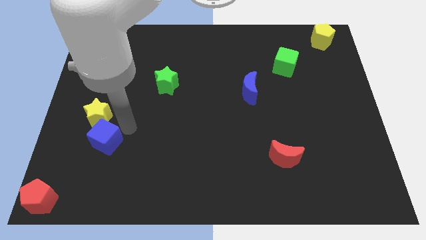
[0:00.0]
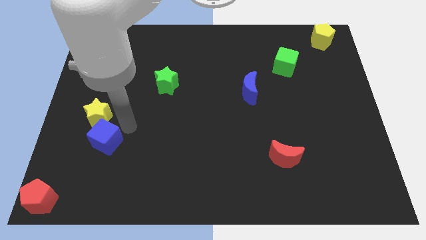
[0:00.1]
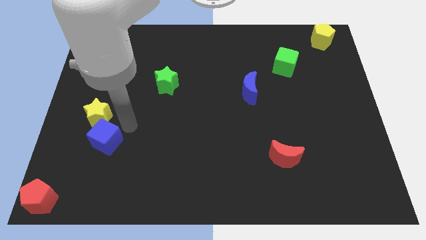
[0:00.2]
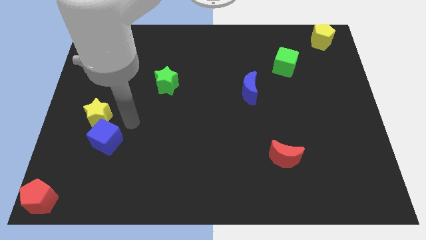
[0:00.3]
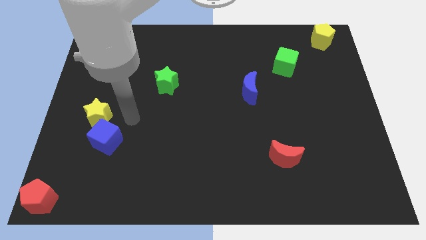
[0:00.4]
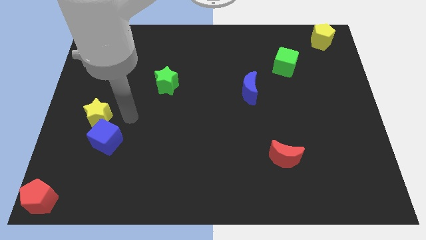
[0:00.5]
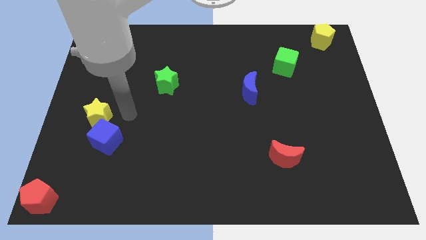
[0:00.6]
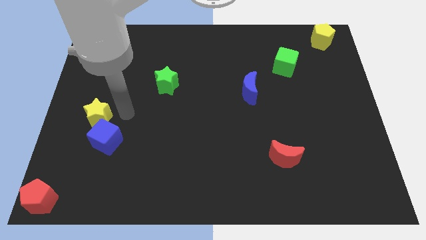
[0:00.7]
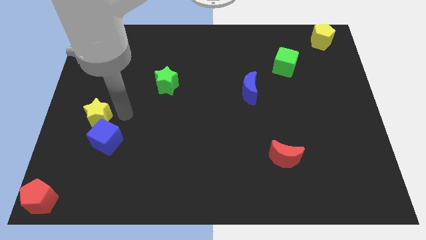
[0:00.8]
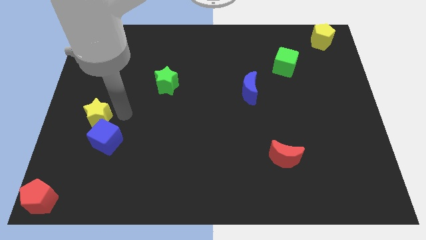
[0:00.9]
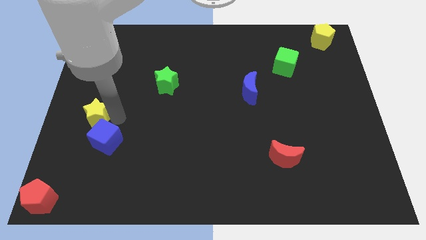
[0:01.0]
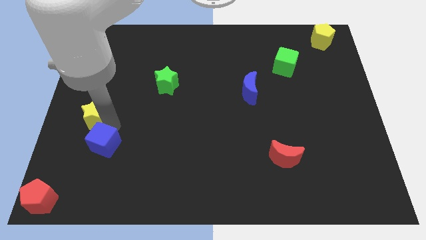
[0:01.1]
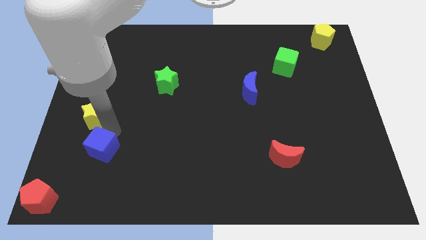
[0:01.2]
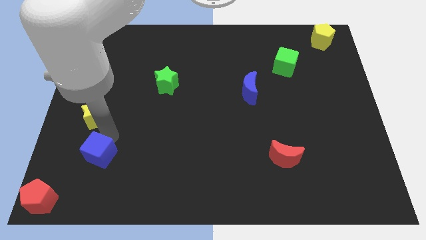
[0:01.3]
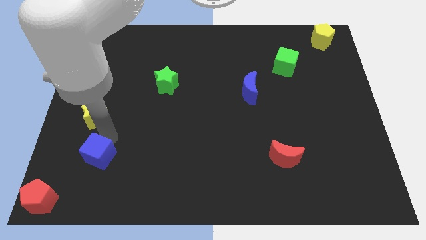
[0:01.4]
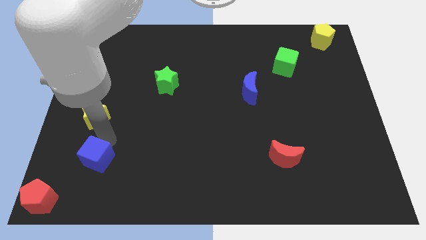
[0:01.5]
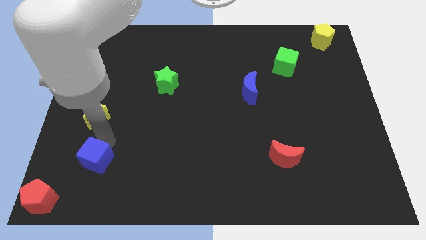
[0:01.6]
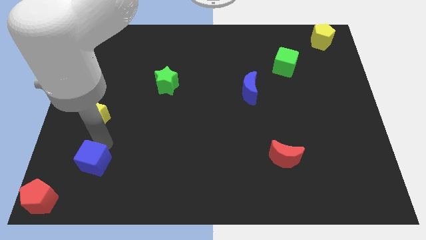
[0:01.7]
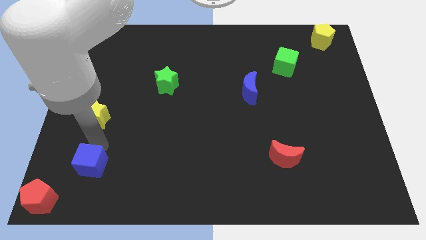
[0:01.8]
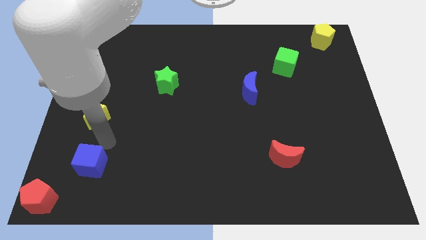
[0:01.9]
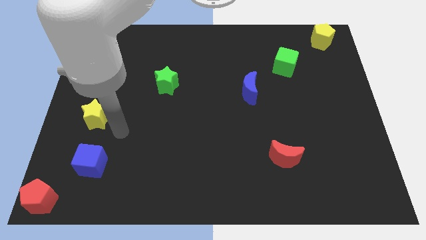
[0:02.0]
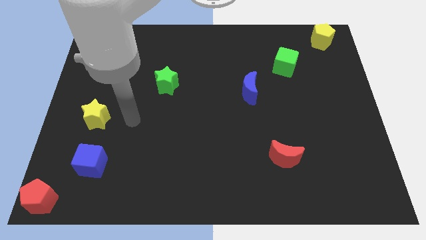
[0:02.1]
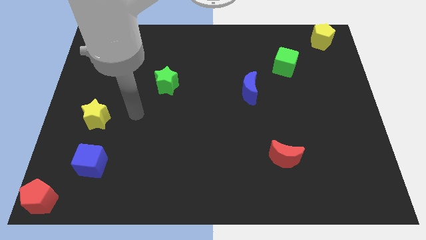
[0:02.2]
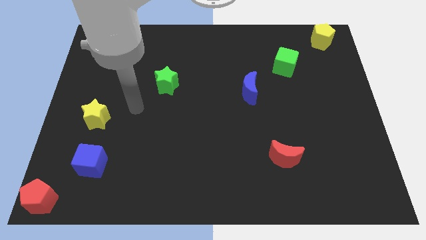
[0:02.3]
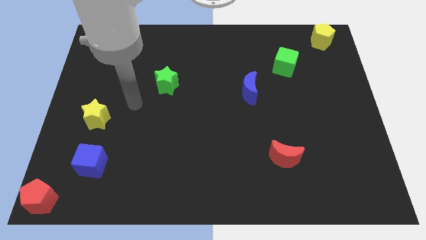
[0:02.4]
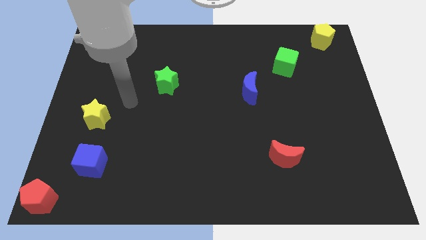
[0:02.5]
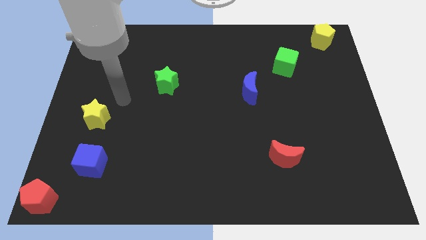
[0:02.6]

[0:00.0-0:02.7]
place blue block between yellow star and red pentagon

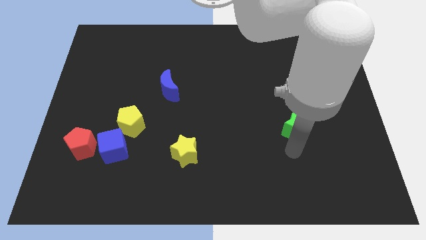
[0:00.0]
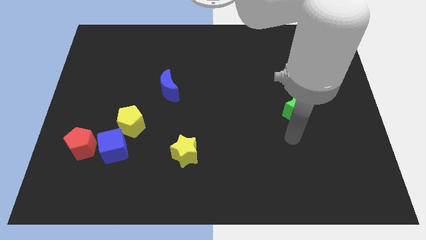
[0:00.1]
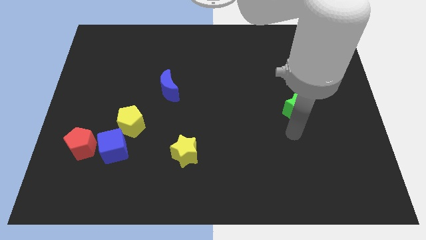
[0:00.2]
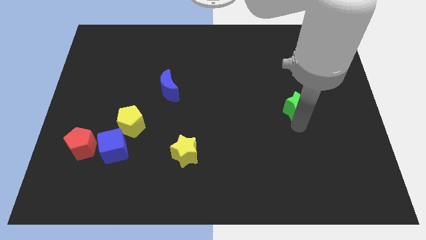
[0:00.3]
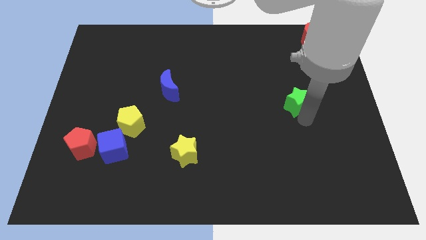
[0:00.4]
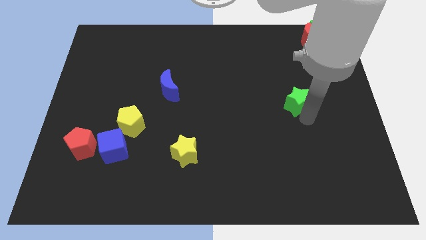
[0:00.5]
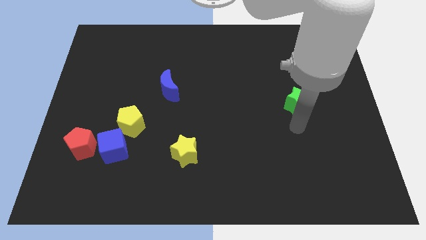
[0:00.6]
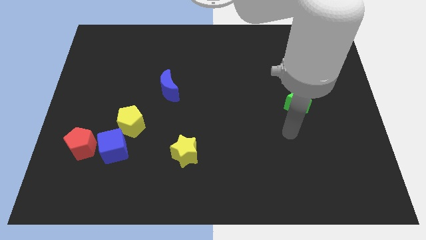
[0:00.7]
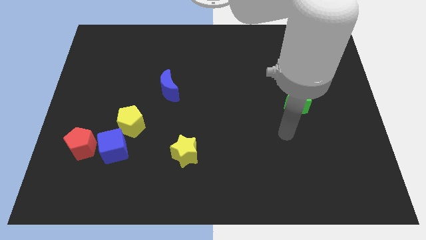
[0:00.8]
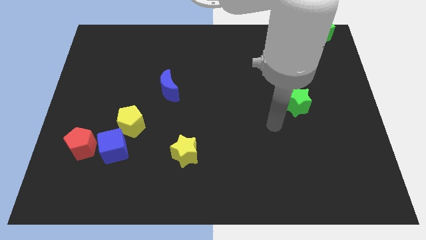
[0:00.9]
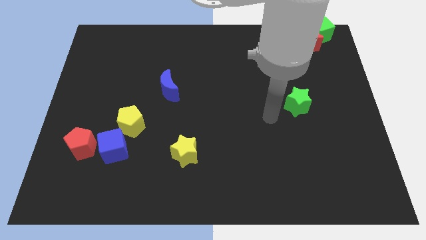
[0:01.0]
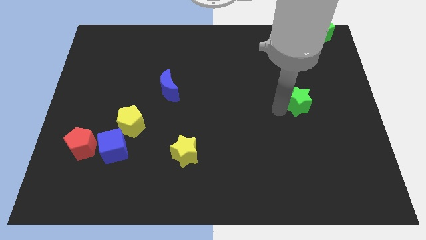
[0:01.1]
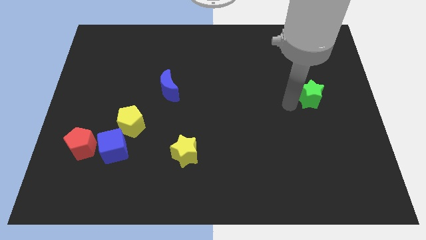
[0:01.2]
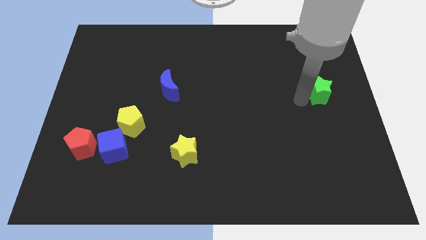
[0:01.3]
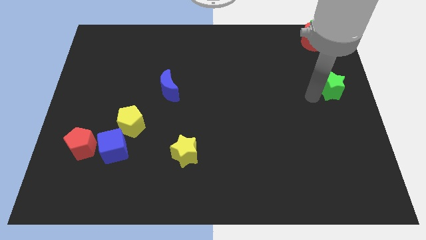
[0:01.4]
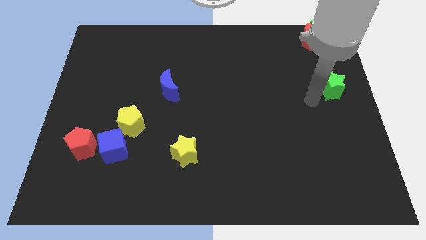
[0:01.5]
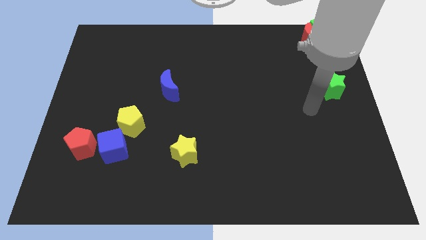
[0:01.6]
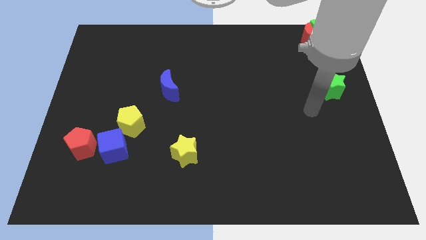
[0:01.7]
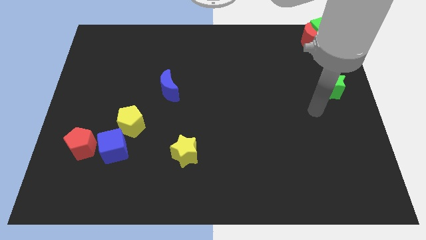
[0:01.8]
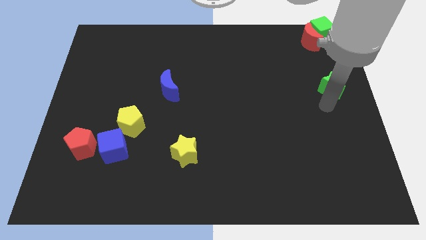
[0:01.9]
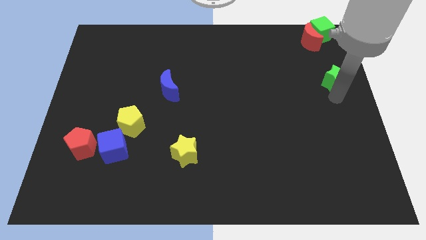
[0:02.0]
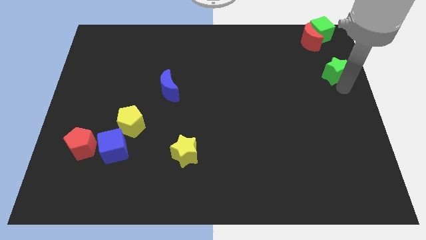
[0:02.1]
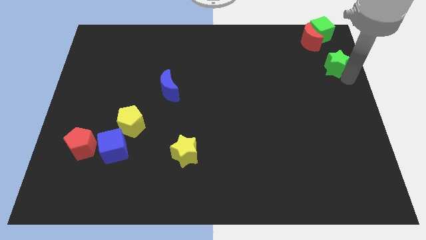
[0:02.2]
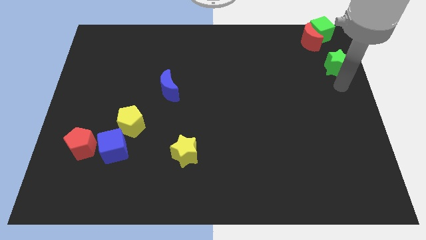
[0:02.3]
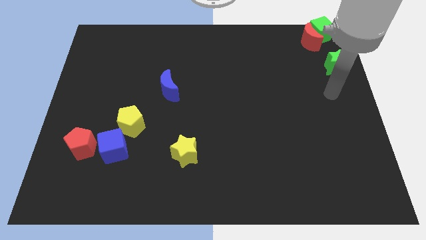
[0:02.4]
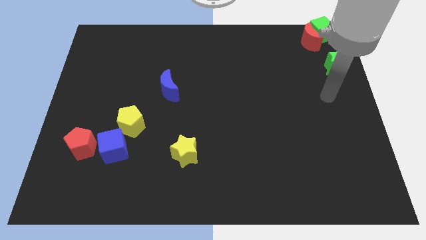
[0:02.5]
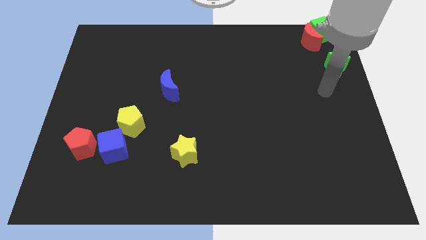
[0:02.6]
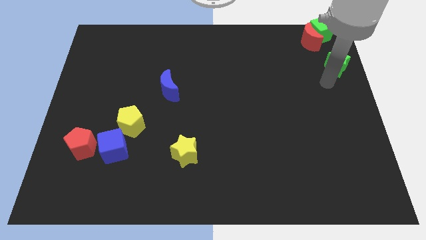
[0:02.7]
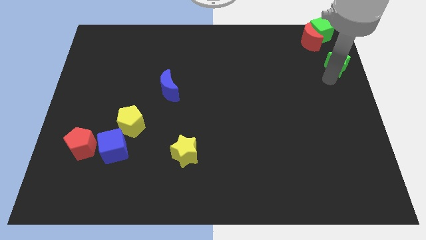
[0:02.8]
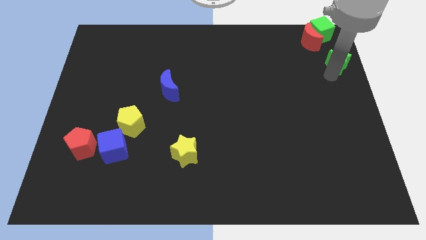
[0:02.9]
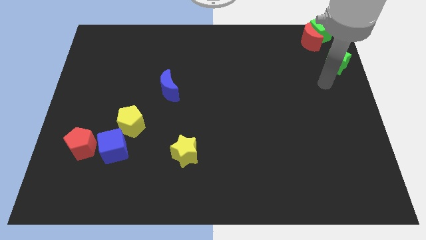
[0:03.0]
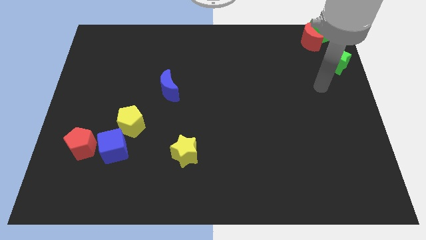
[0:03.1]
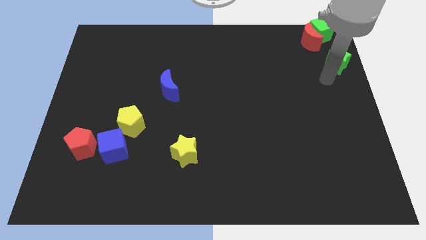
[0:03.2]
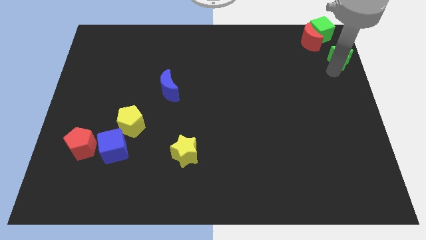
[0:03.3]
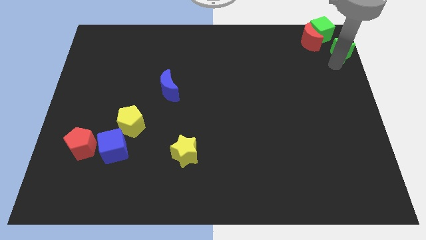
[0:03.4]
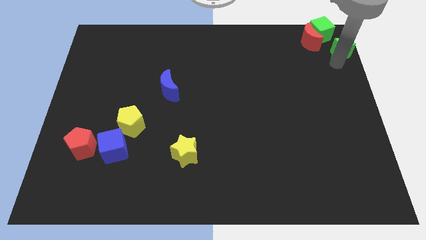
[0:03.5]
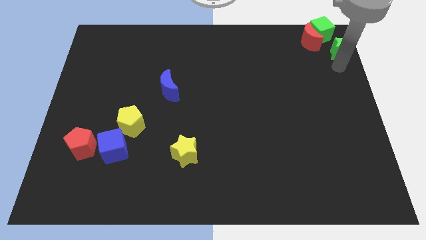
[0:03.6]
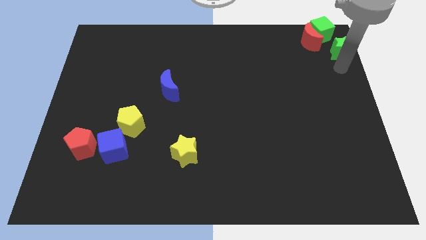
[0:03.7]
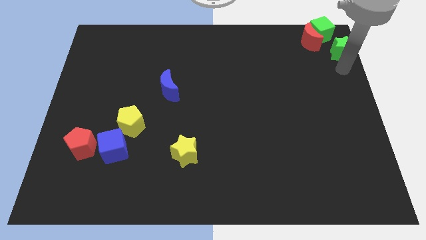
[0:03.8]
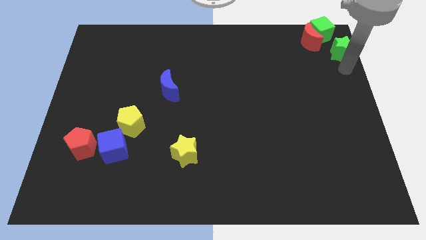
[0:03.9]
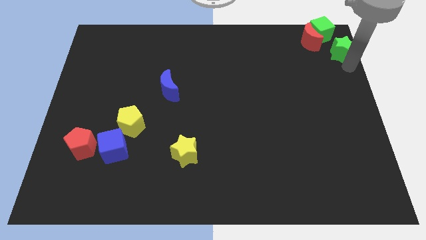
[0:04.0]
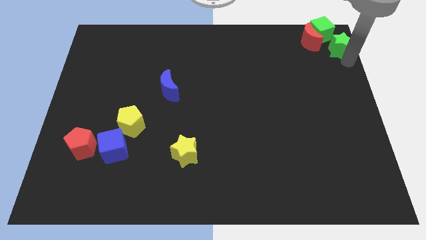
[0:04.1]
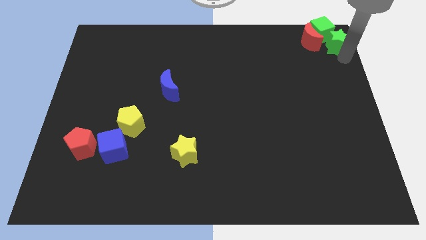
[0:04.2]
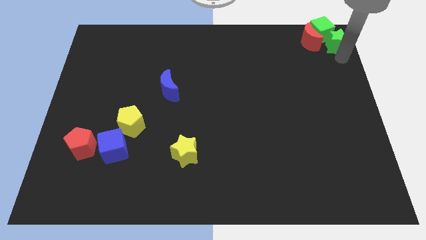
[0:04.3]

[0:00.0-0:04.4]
push the green star to the bottom right of the green cube

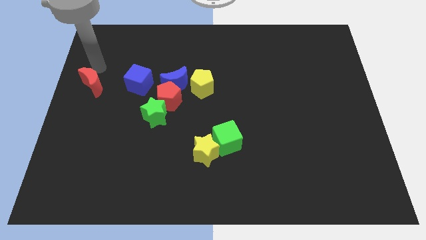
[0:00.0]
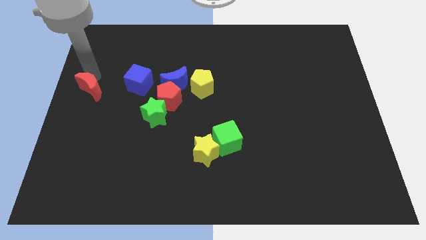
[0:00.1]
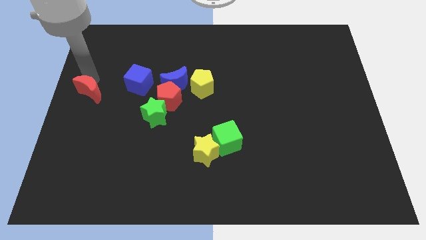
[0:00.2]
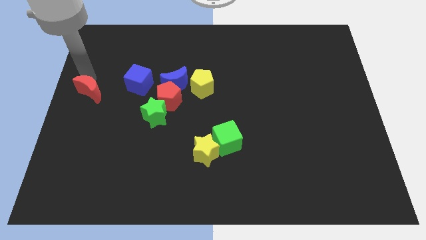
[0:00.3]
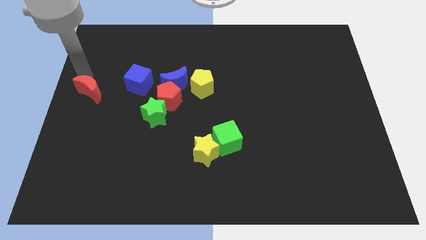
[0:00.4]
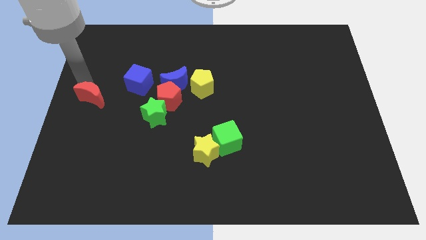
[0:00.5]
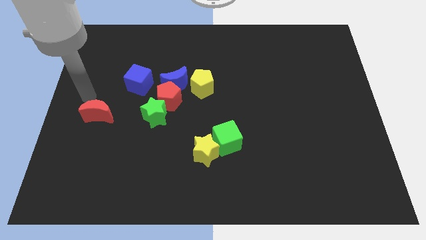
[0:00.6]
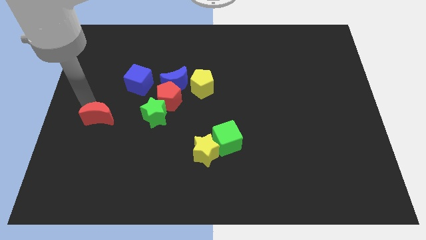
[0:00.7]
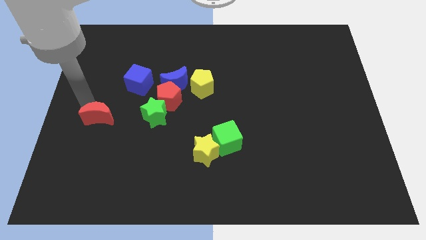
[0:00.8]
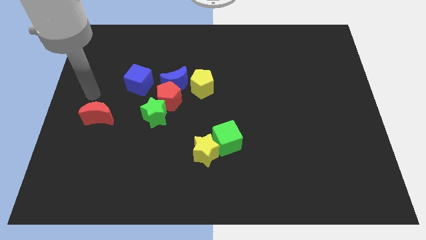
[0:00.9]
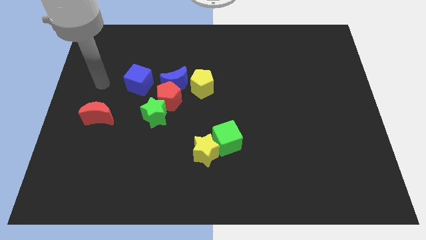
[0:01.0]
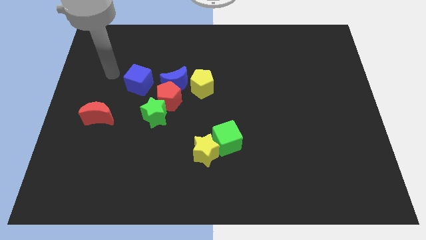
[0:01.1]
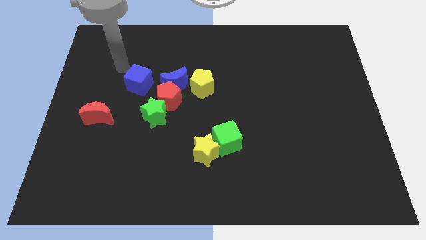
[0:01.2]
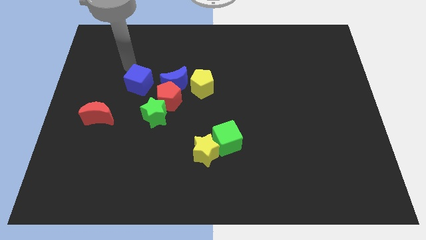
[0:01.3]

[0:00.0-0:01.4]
slide the red moon horizontal to the green star

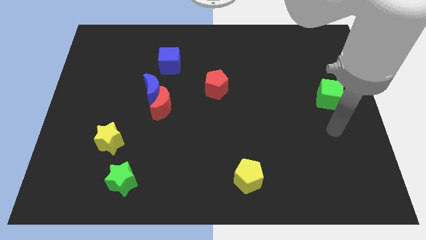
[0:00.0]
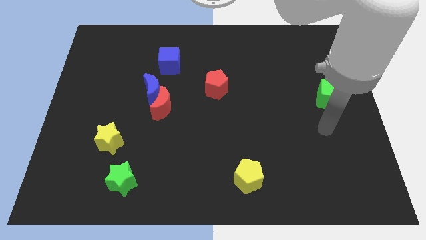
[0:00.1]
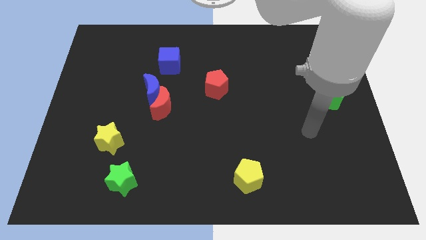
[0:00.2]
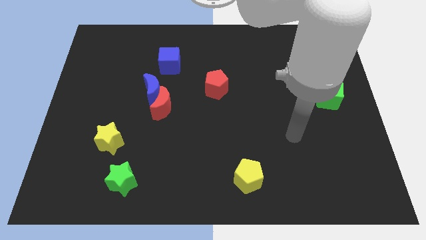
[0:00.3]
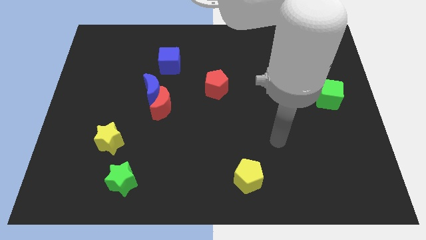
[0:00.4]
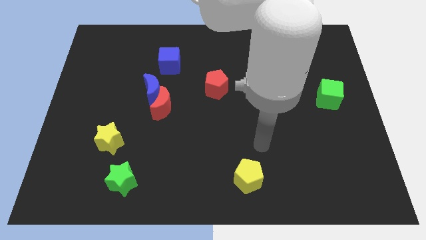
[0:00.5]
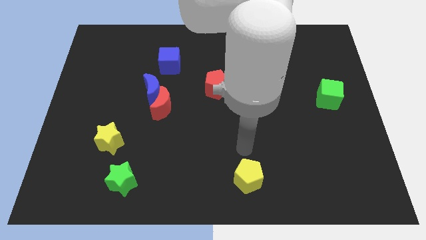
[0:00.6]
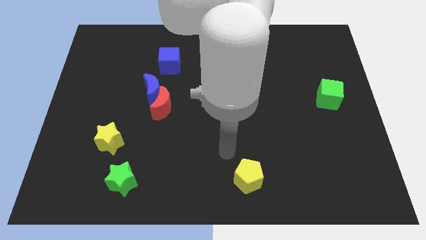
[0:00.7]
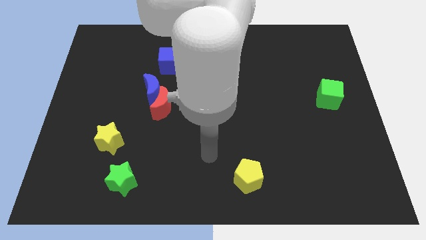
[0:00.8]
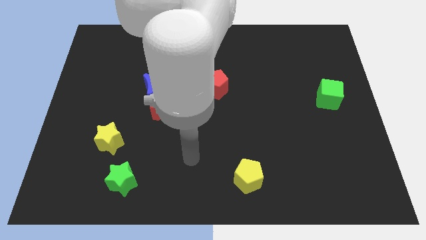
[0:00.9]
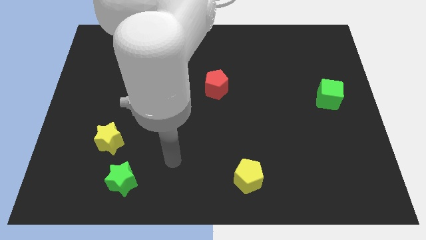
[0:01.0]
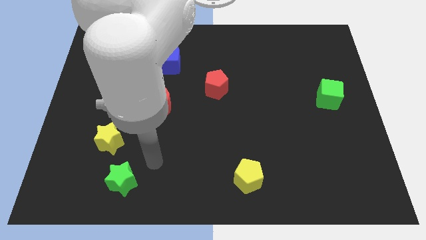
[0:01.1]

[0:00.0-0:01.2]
place your arm to the right of the green star
